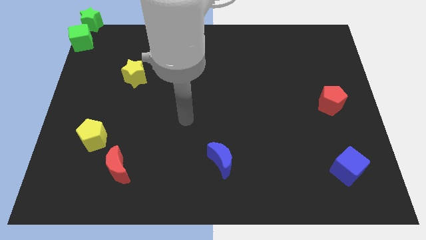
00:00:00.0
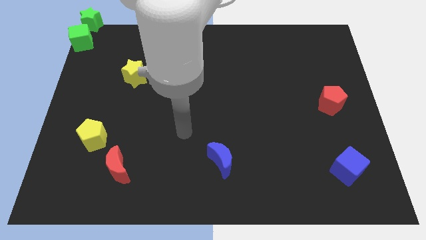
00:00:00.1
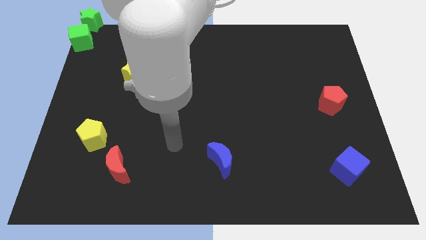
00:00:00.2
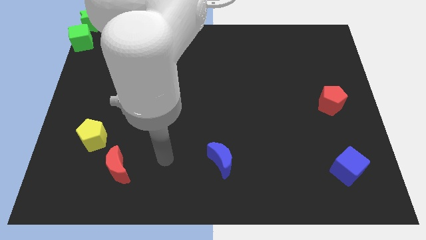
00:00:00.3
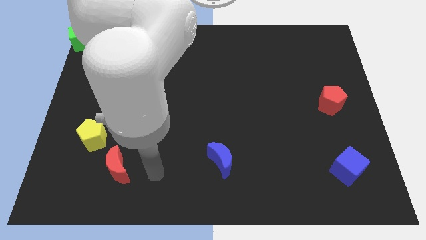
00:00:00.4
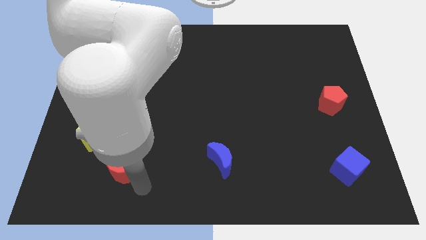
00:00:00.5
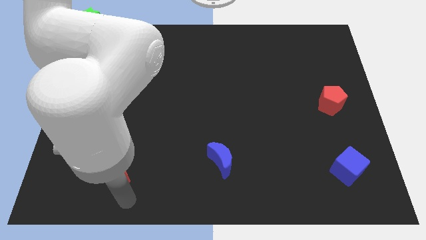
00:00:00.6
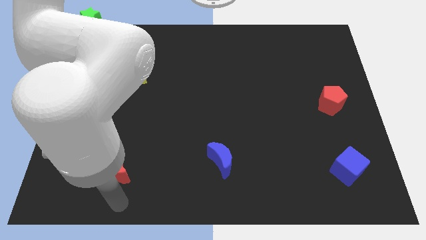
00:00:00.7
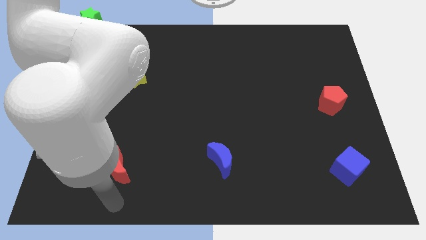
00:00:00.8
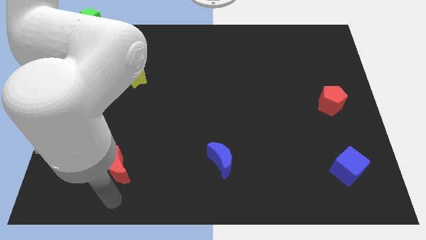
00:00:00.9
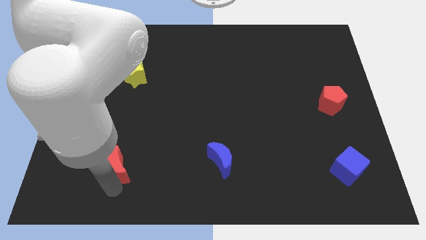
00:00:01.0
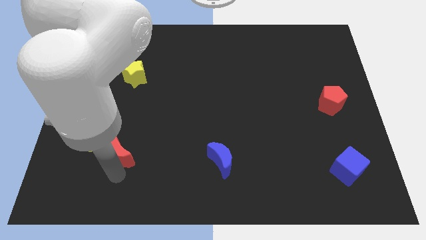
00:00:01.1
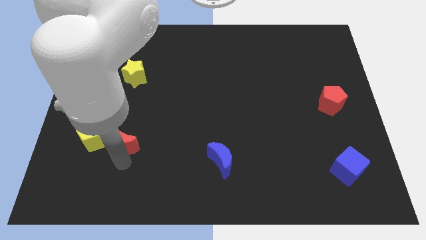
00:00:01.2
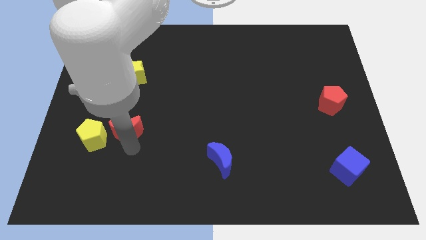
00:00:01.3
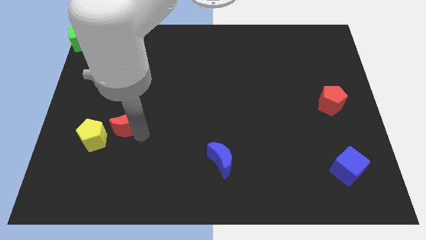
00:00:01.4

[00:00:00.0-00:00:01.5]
move the red crescent to the right of yellow pentagon

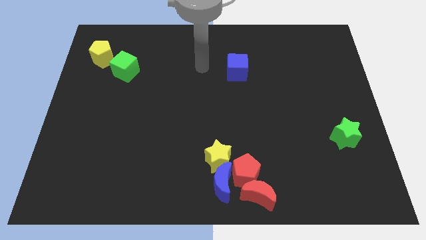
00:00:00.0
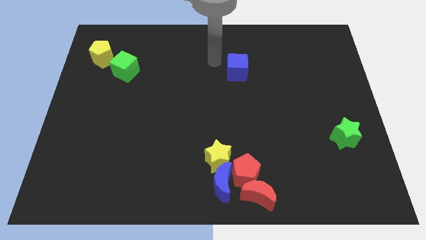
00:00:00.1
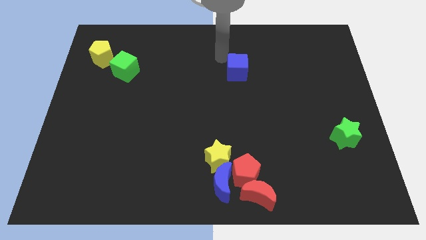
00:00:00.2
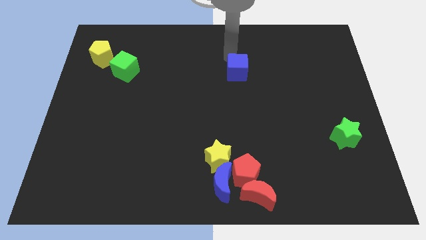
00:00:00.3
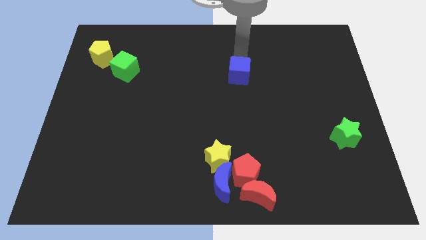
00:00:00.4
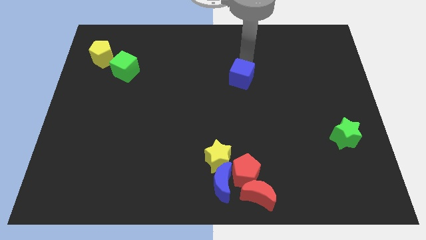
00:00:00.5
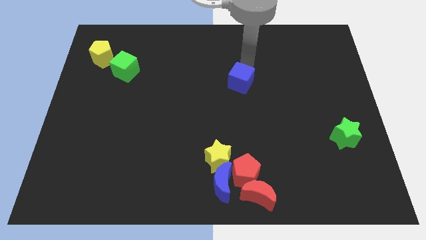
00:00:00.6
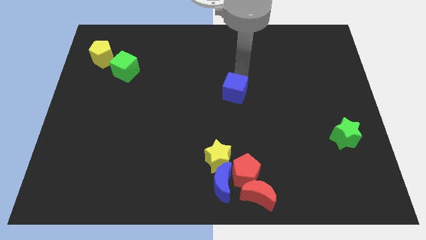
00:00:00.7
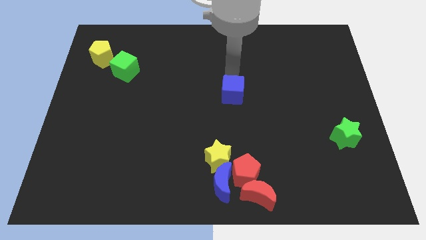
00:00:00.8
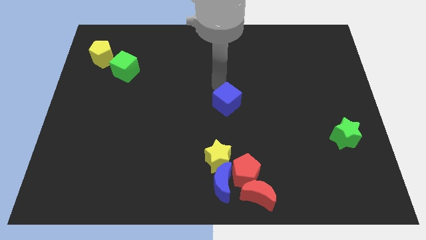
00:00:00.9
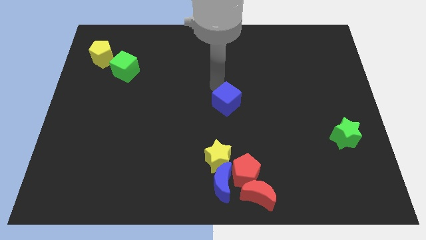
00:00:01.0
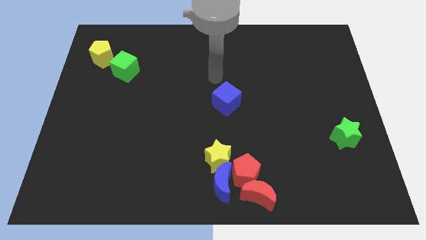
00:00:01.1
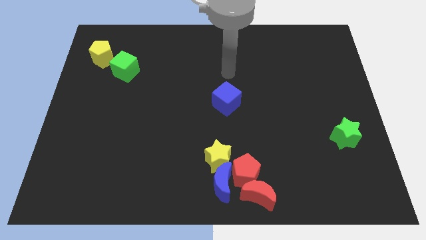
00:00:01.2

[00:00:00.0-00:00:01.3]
place blue cube to the center of the board

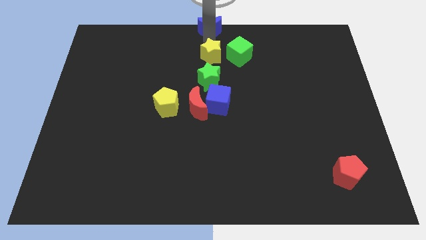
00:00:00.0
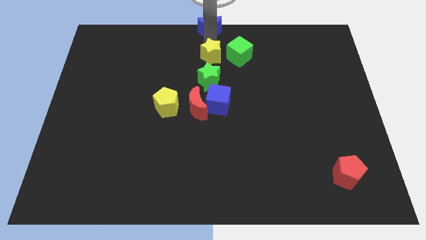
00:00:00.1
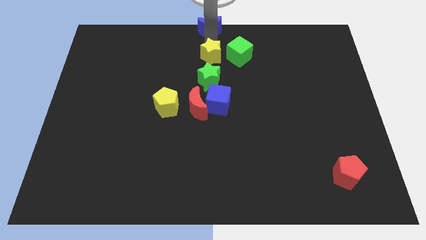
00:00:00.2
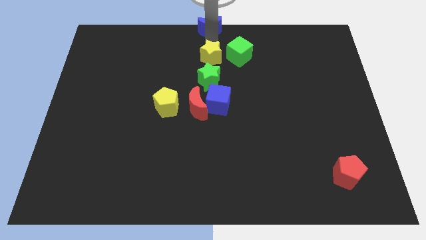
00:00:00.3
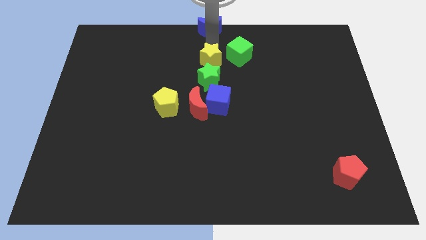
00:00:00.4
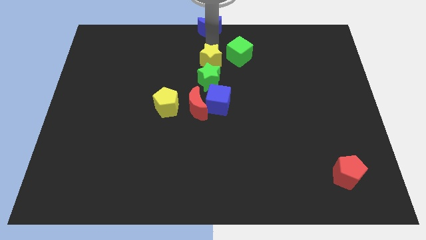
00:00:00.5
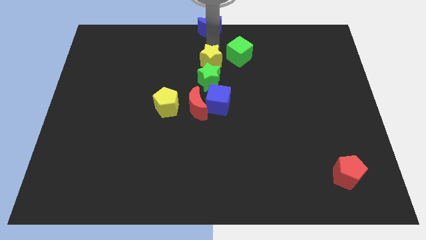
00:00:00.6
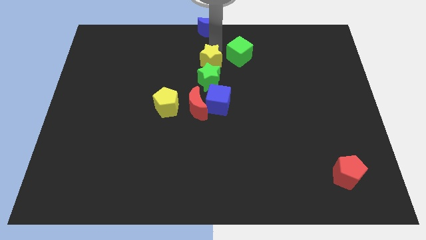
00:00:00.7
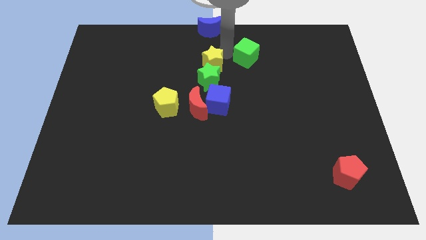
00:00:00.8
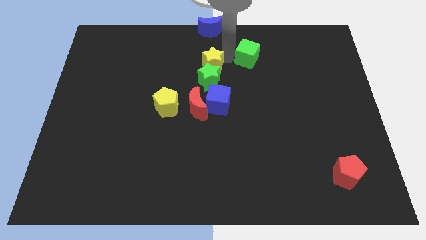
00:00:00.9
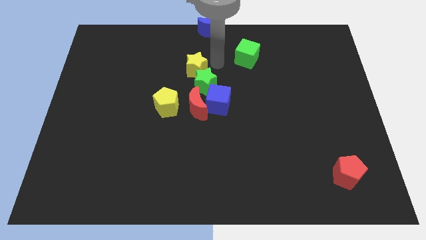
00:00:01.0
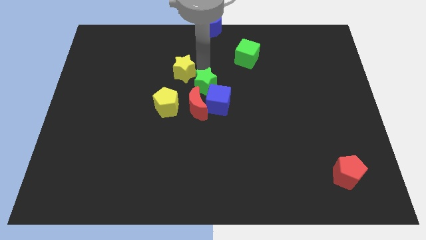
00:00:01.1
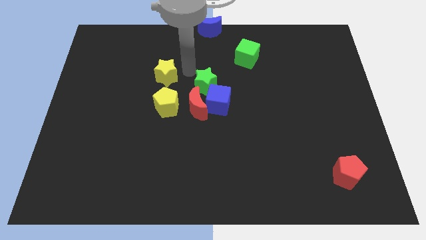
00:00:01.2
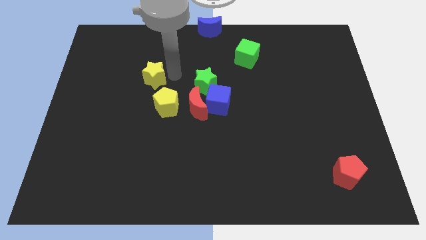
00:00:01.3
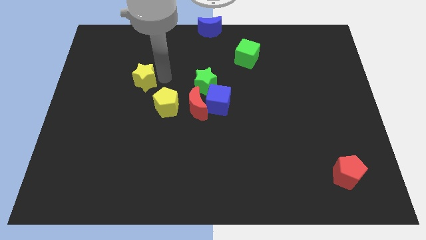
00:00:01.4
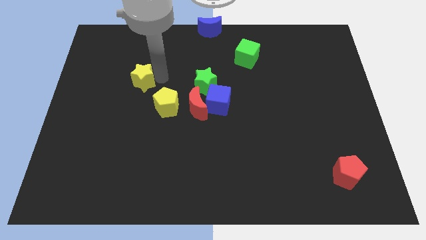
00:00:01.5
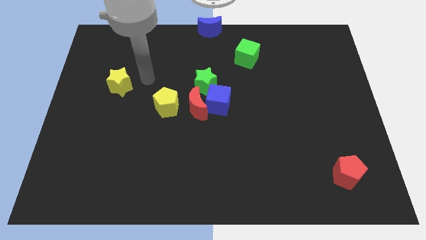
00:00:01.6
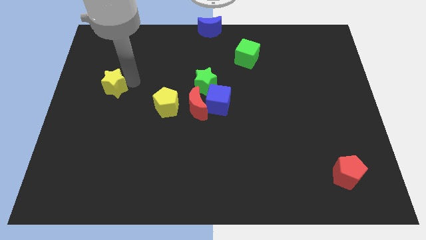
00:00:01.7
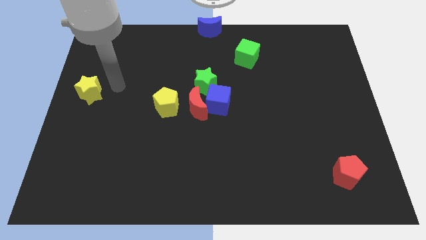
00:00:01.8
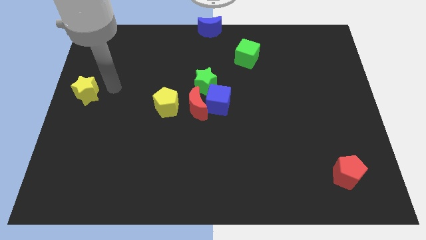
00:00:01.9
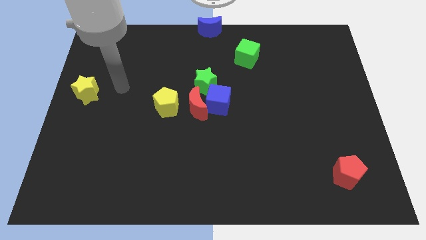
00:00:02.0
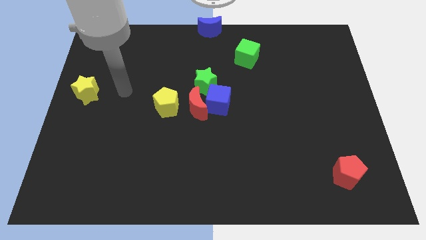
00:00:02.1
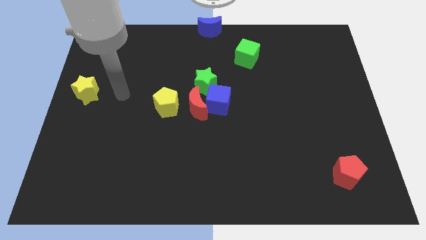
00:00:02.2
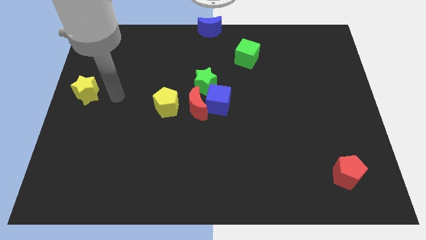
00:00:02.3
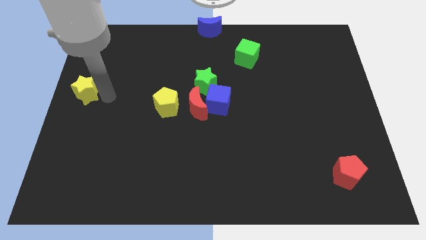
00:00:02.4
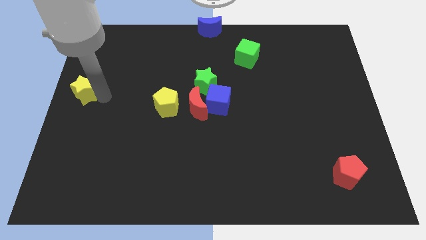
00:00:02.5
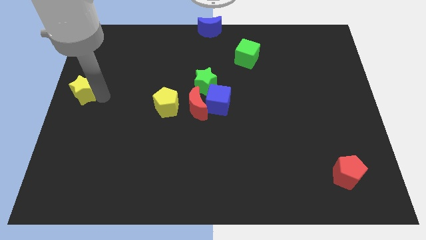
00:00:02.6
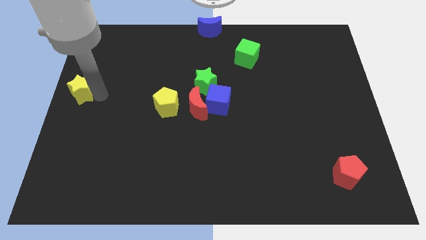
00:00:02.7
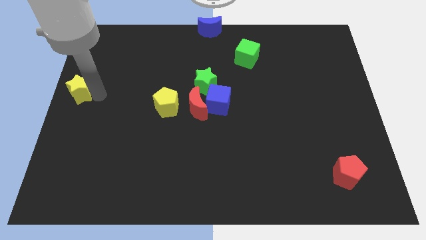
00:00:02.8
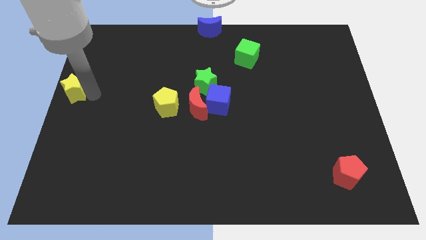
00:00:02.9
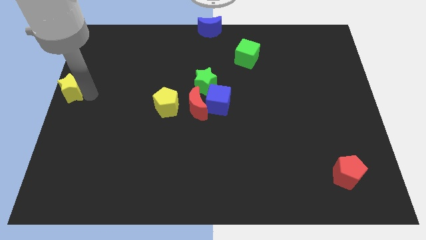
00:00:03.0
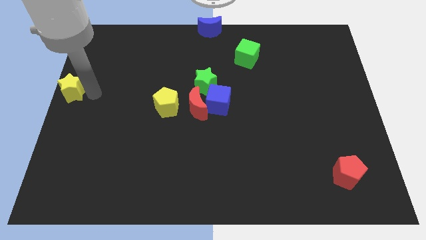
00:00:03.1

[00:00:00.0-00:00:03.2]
push the yellow star to the left center of the board

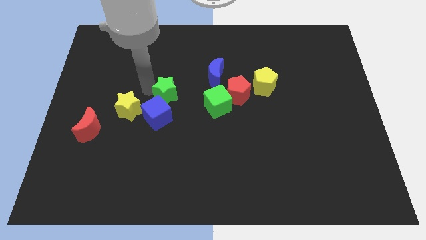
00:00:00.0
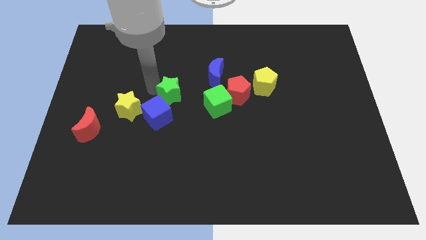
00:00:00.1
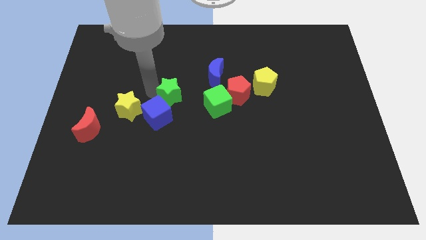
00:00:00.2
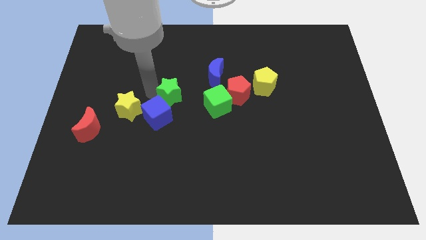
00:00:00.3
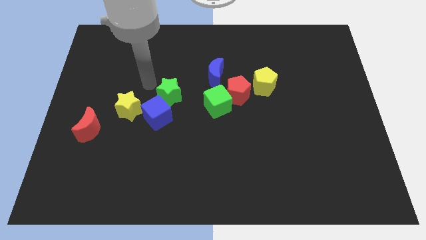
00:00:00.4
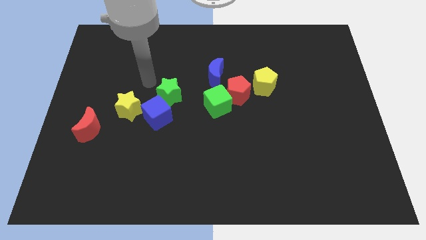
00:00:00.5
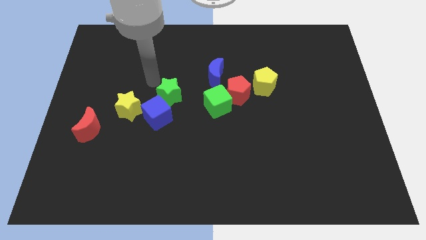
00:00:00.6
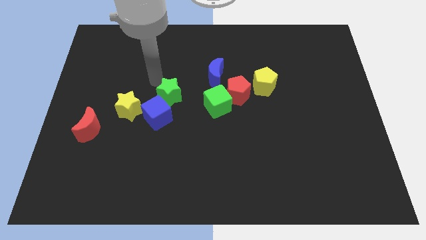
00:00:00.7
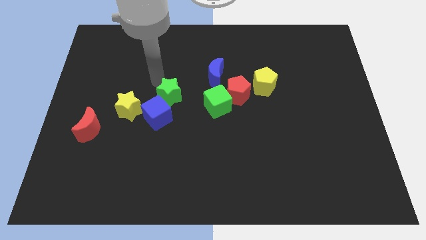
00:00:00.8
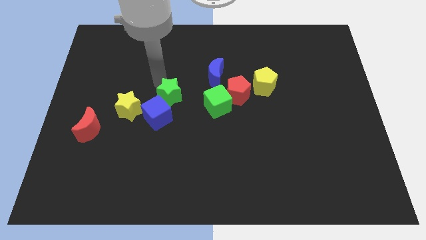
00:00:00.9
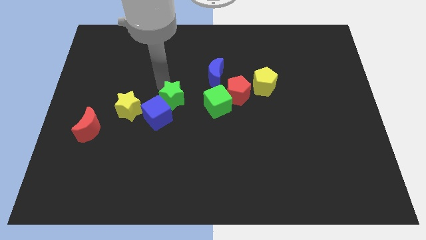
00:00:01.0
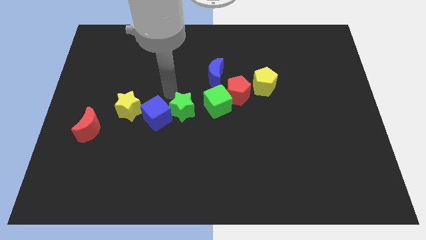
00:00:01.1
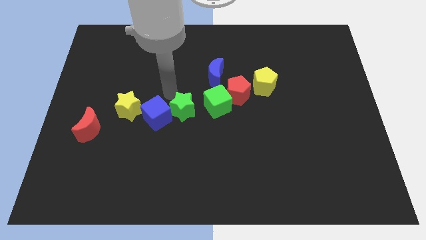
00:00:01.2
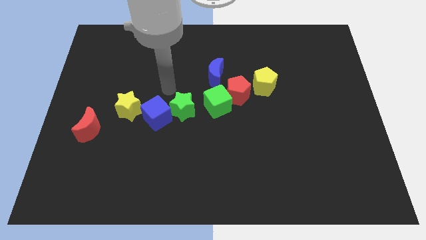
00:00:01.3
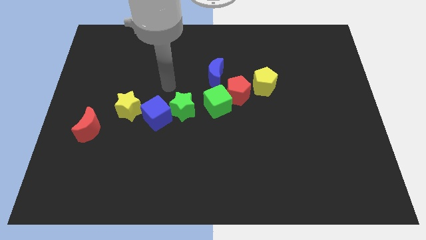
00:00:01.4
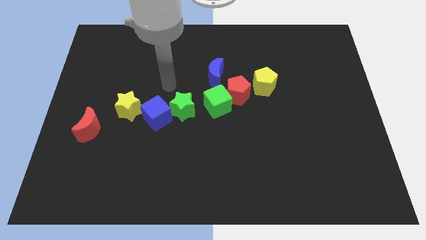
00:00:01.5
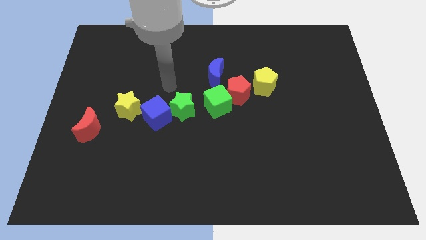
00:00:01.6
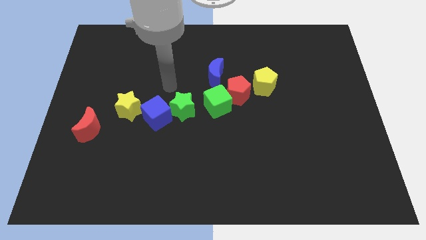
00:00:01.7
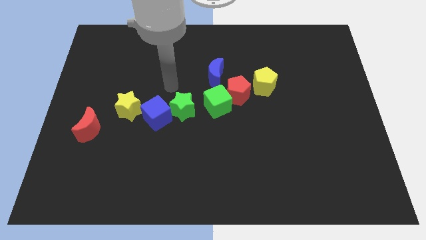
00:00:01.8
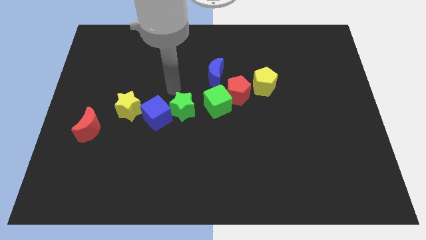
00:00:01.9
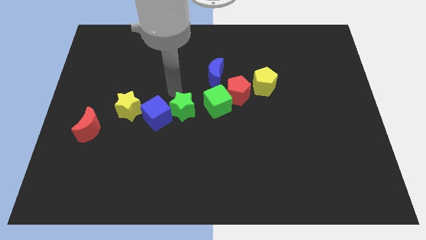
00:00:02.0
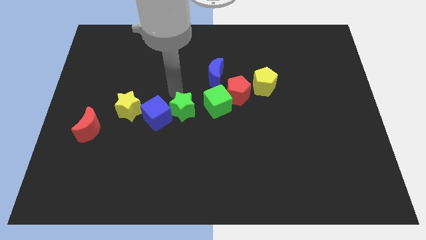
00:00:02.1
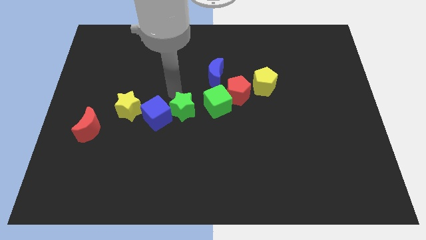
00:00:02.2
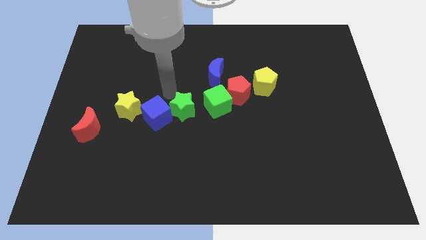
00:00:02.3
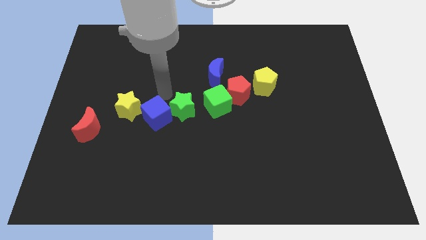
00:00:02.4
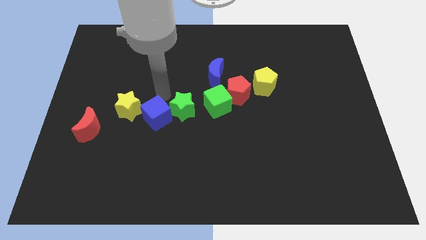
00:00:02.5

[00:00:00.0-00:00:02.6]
put the green star in between the green cube and blue cube

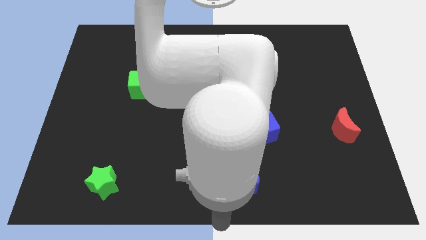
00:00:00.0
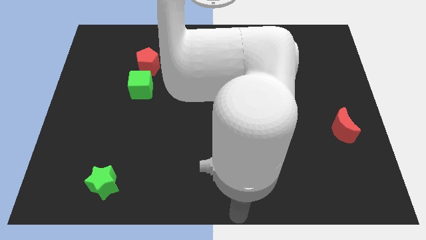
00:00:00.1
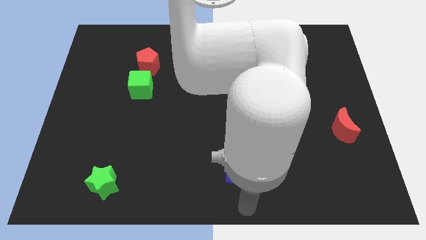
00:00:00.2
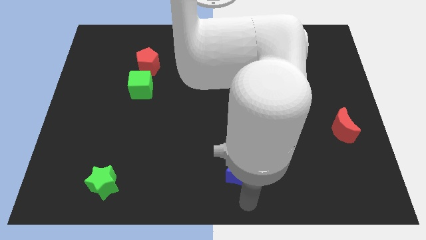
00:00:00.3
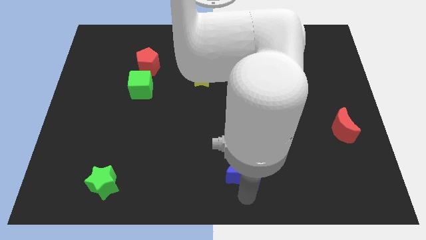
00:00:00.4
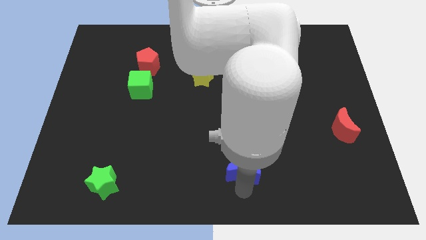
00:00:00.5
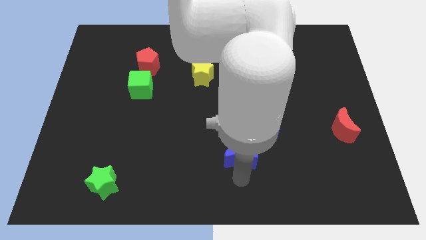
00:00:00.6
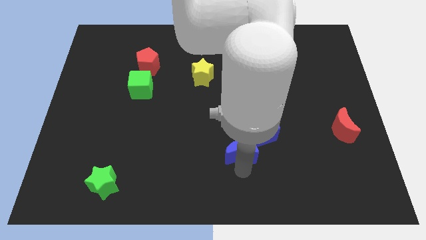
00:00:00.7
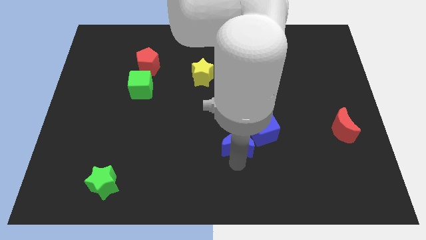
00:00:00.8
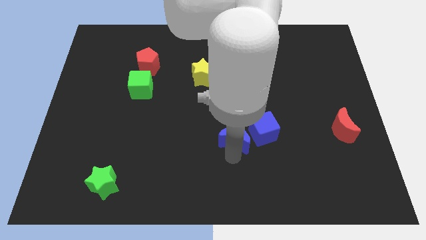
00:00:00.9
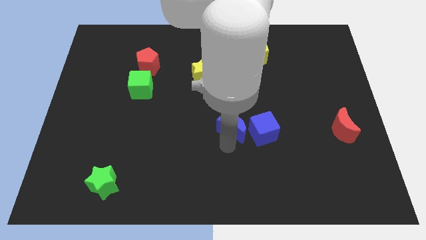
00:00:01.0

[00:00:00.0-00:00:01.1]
place the blue moon to the left side of blue cube
